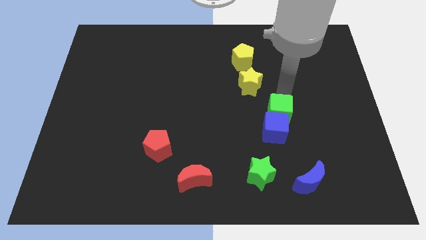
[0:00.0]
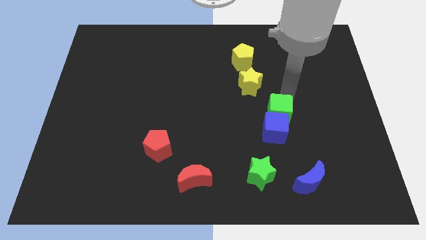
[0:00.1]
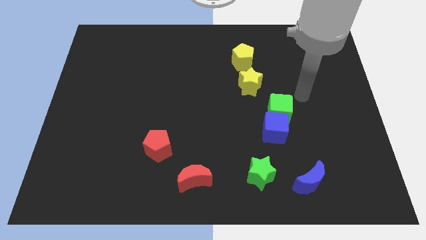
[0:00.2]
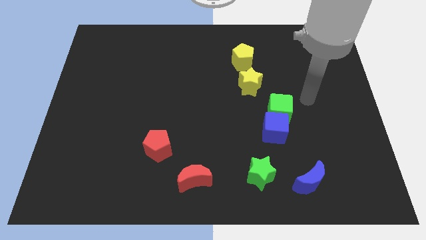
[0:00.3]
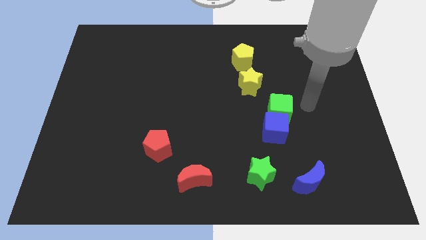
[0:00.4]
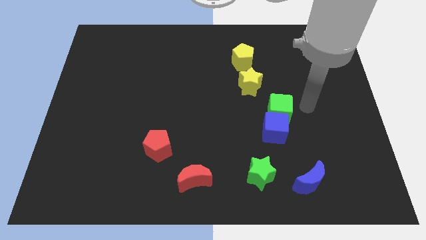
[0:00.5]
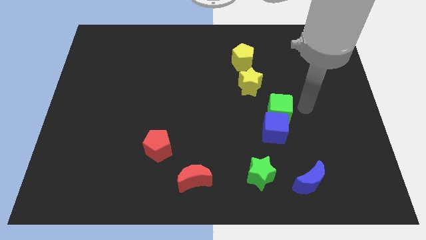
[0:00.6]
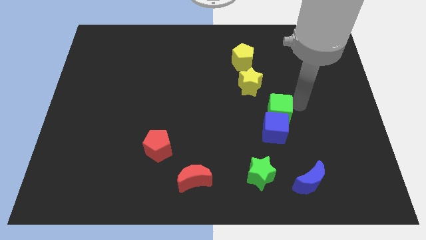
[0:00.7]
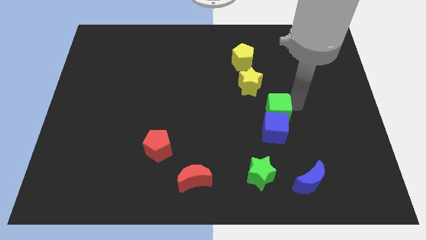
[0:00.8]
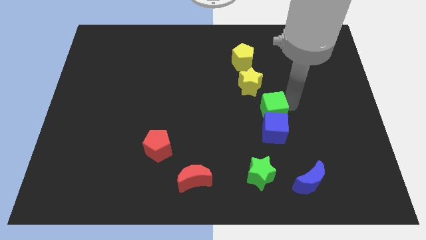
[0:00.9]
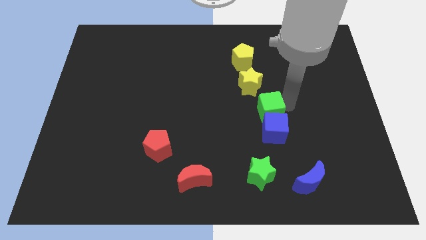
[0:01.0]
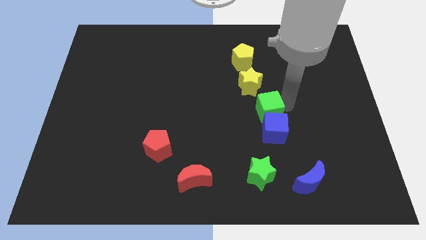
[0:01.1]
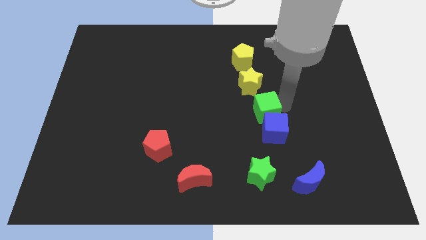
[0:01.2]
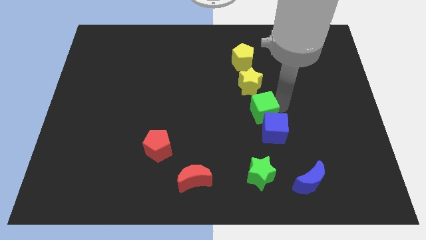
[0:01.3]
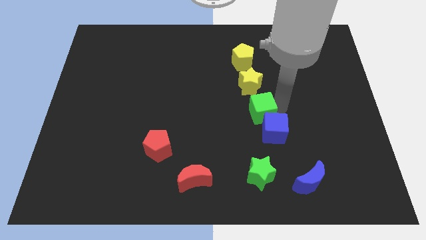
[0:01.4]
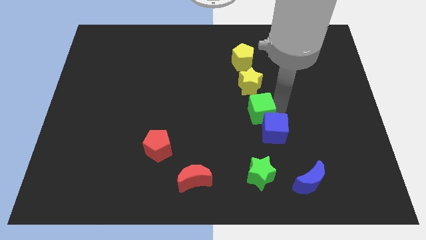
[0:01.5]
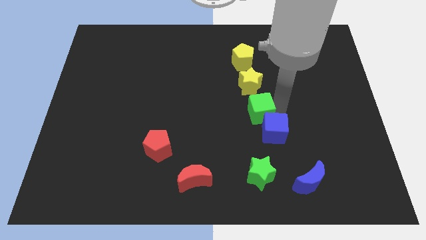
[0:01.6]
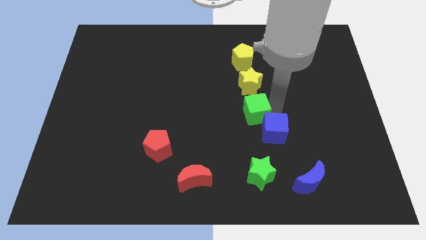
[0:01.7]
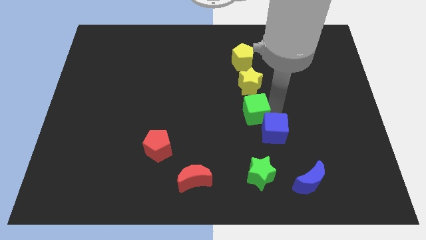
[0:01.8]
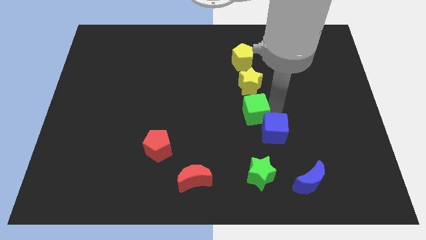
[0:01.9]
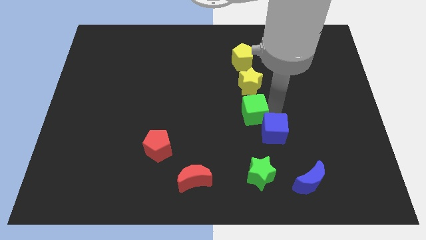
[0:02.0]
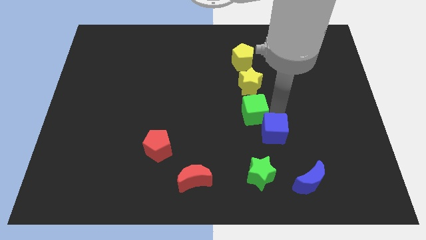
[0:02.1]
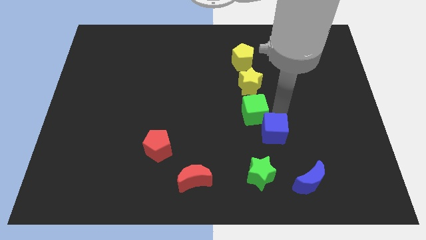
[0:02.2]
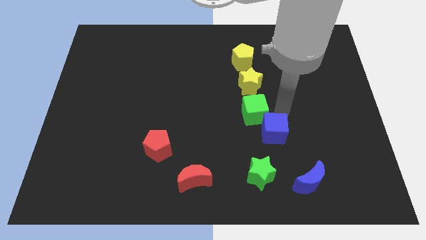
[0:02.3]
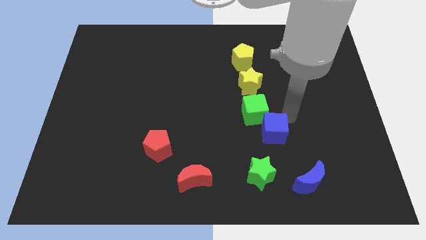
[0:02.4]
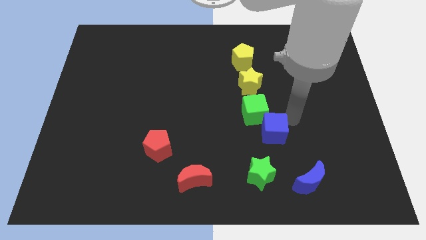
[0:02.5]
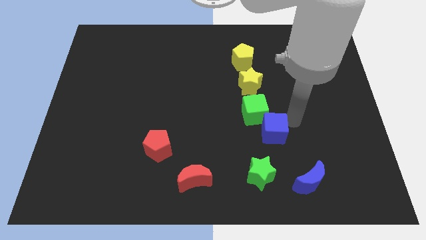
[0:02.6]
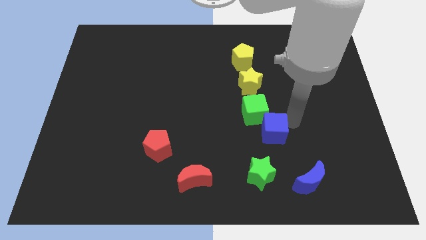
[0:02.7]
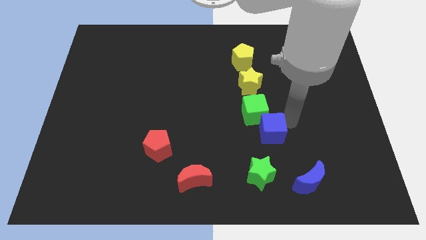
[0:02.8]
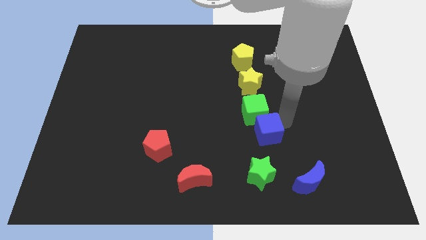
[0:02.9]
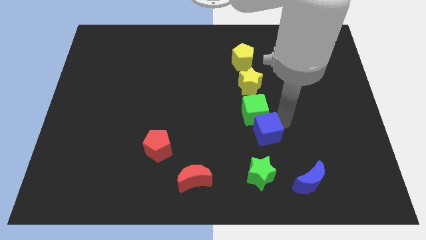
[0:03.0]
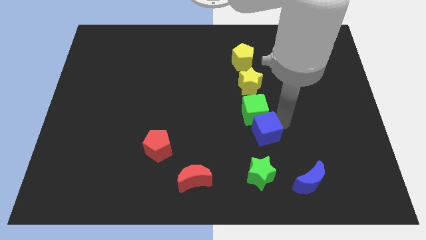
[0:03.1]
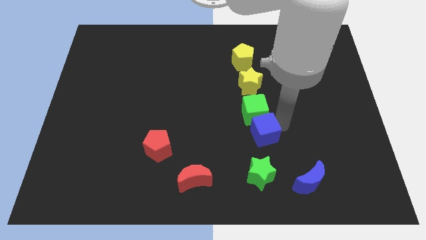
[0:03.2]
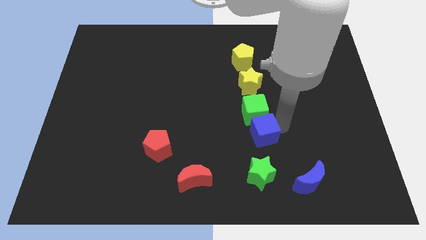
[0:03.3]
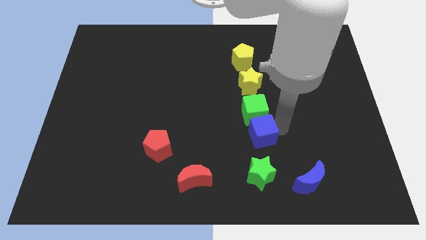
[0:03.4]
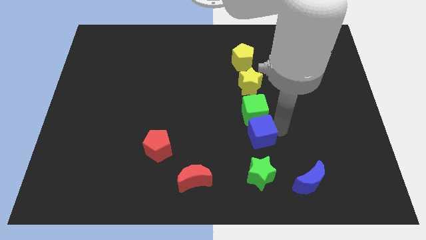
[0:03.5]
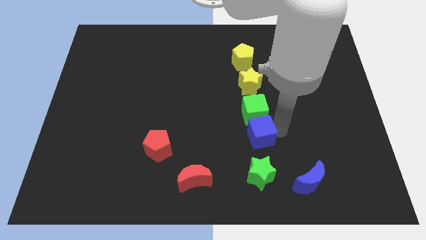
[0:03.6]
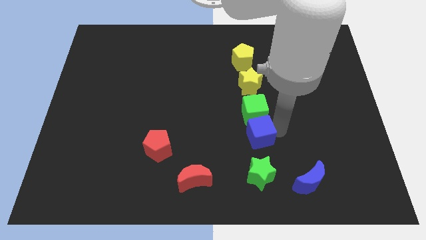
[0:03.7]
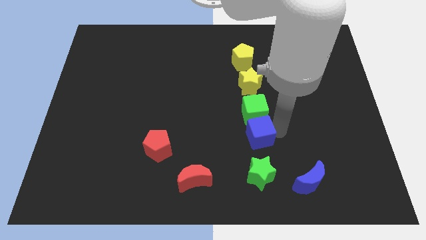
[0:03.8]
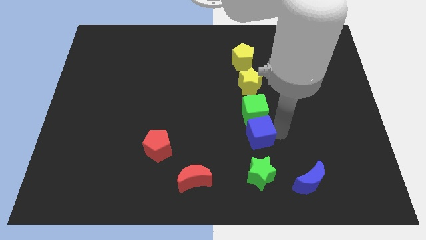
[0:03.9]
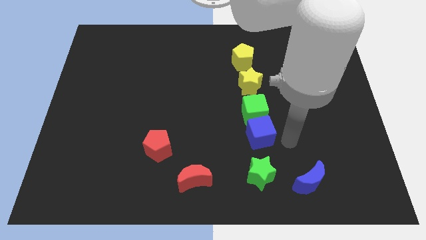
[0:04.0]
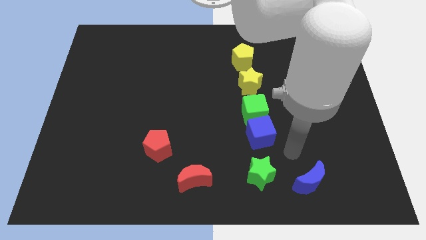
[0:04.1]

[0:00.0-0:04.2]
move the green and blue cubes slightly to the left side of the board

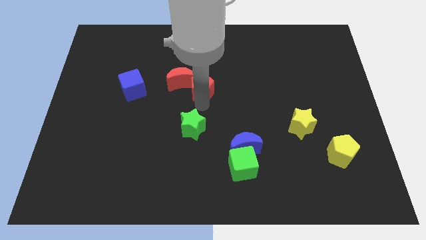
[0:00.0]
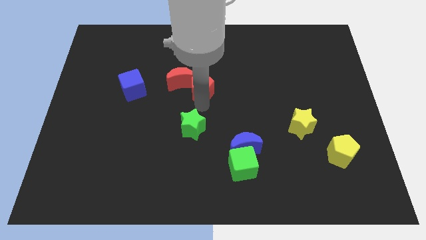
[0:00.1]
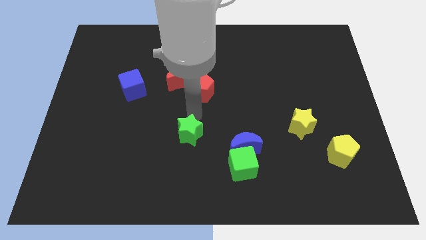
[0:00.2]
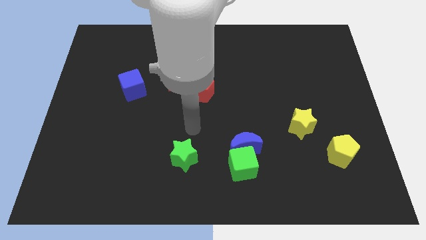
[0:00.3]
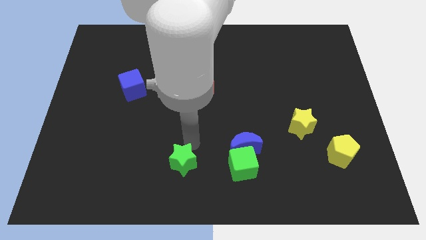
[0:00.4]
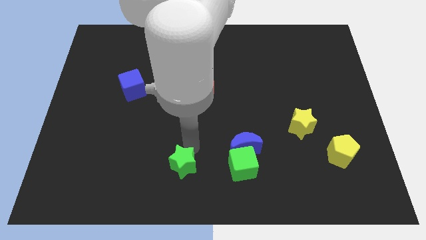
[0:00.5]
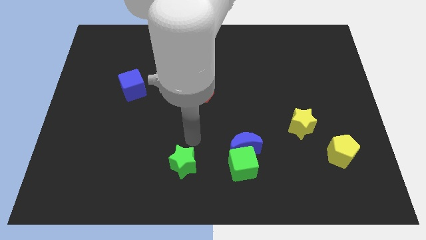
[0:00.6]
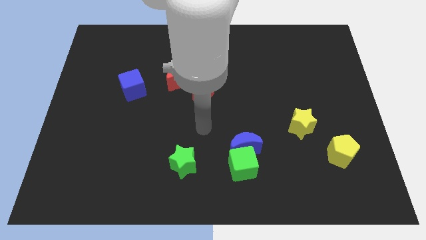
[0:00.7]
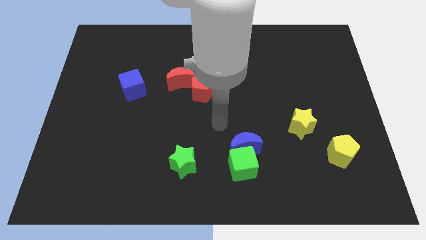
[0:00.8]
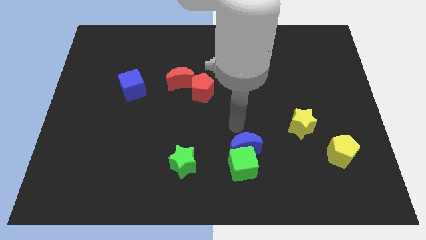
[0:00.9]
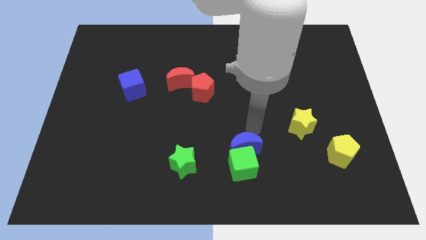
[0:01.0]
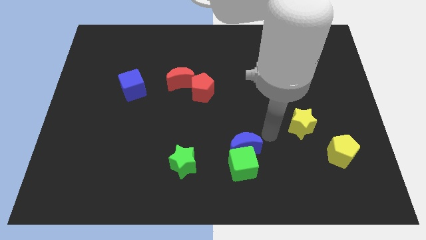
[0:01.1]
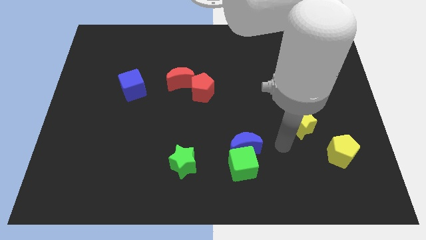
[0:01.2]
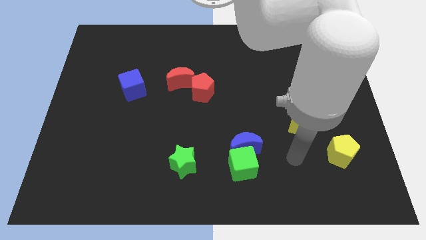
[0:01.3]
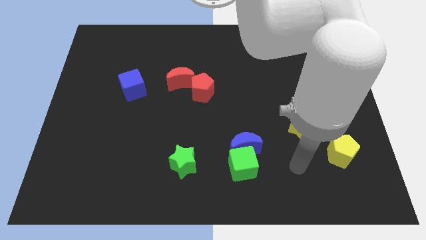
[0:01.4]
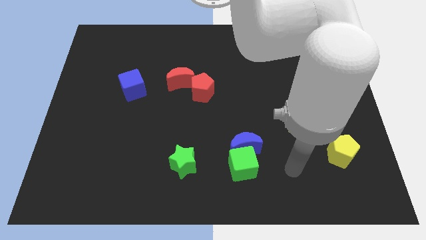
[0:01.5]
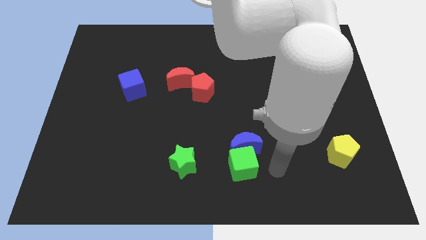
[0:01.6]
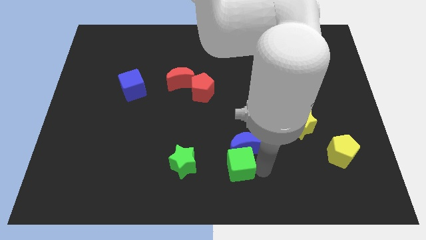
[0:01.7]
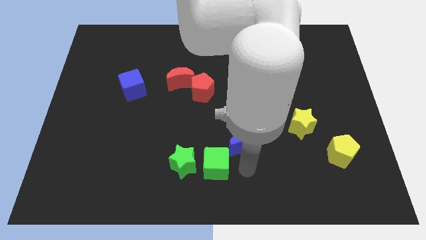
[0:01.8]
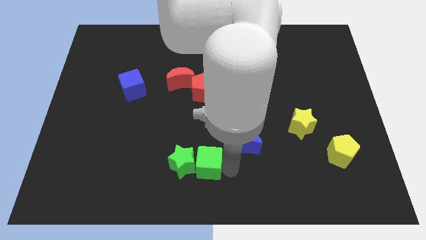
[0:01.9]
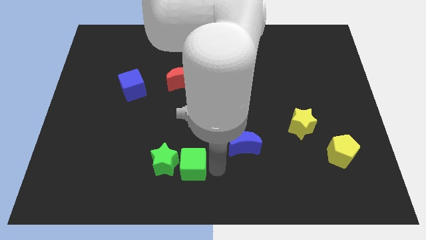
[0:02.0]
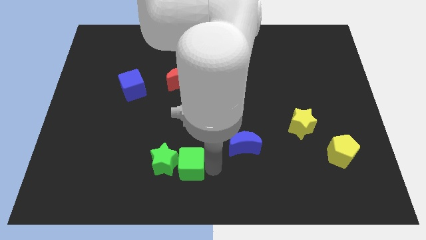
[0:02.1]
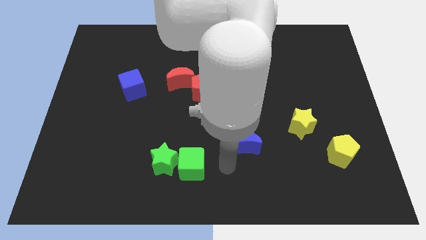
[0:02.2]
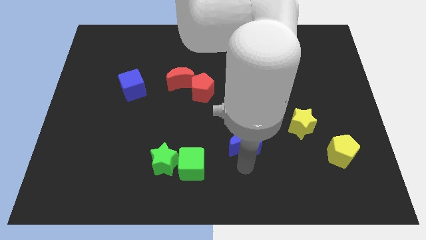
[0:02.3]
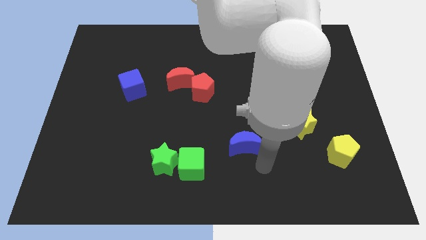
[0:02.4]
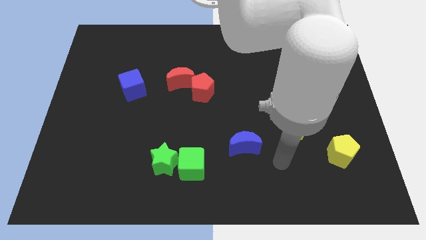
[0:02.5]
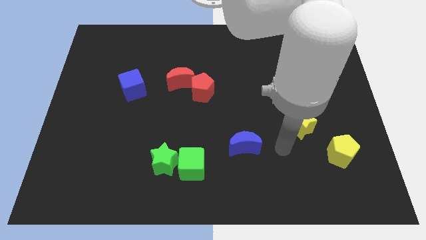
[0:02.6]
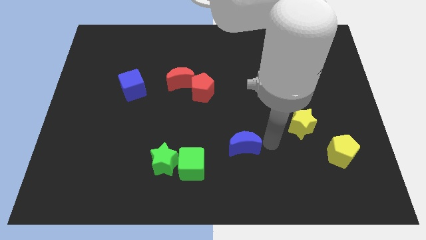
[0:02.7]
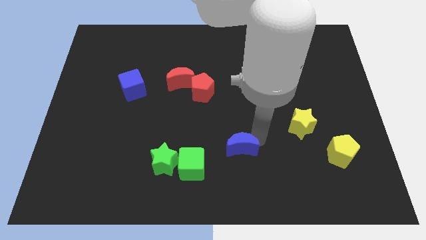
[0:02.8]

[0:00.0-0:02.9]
move arm near blue moon

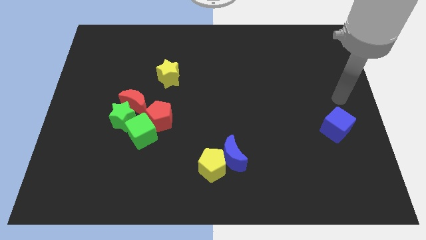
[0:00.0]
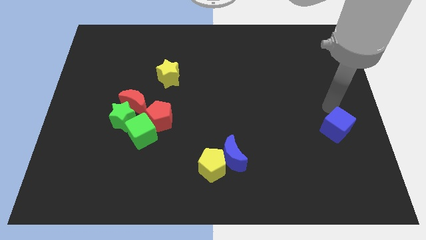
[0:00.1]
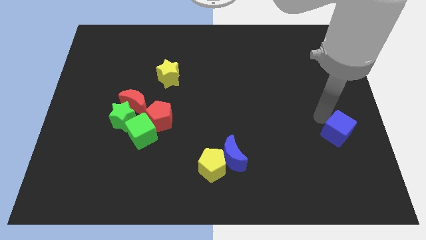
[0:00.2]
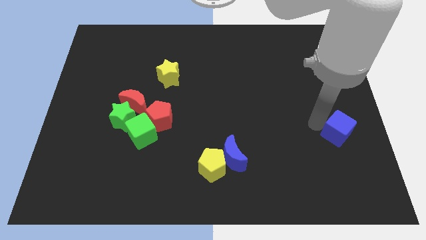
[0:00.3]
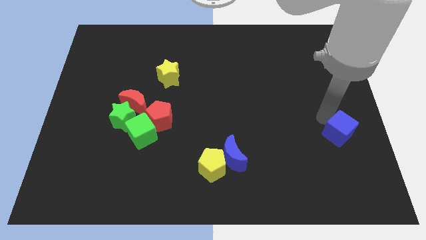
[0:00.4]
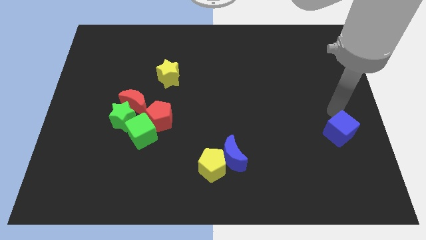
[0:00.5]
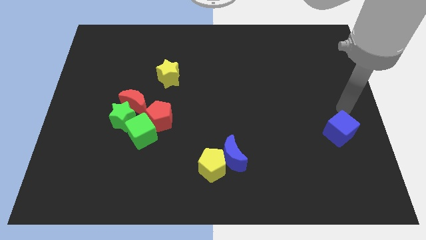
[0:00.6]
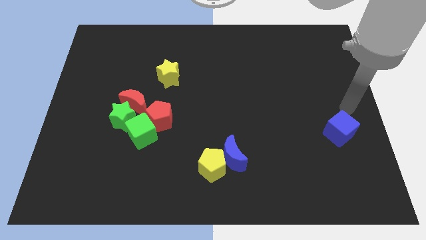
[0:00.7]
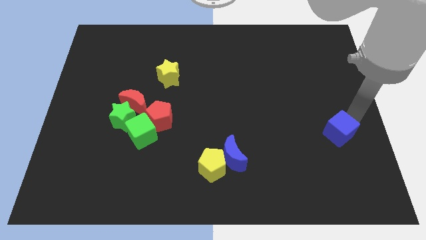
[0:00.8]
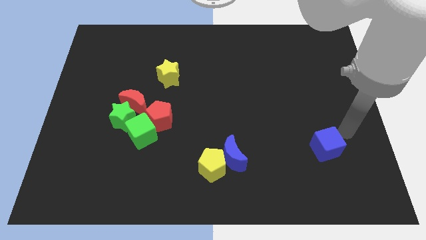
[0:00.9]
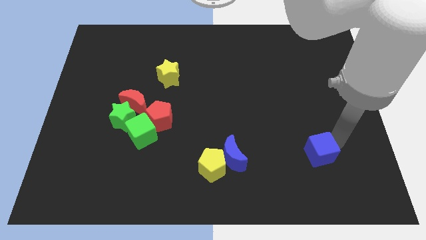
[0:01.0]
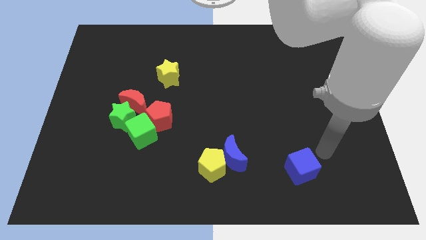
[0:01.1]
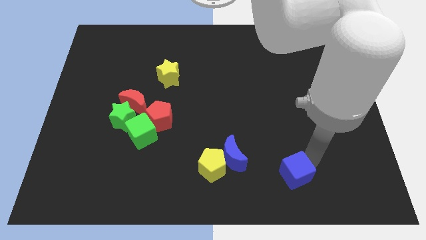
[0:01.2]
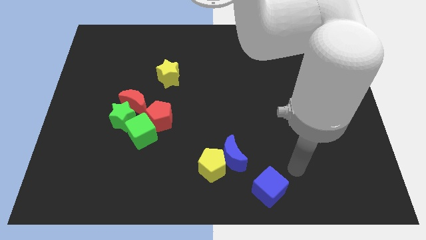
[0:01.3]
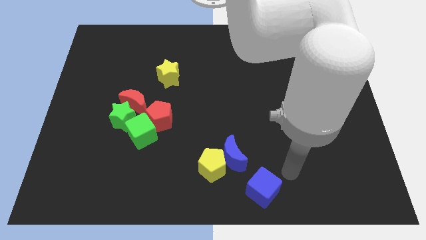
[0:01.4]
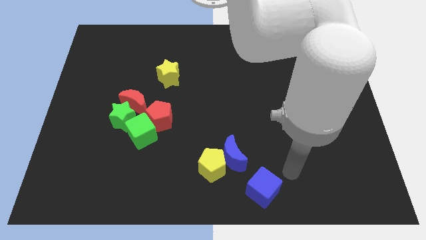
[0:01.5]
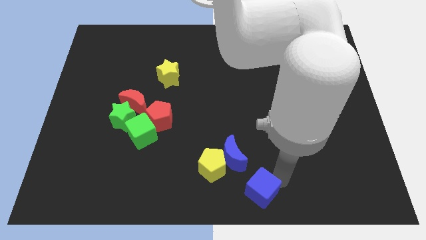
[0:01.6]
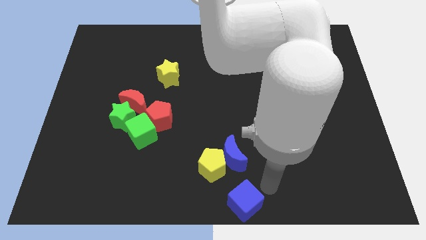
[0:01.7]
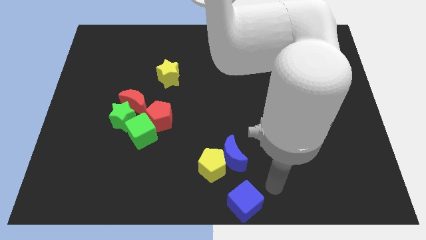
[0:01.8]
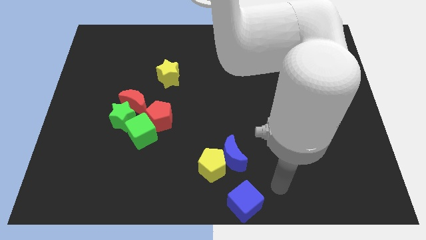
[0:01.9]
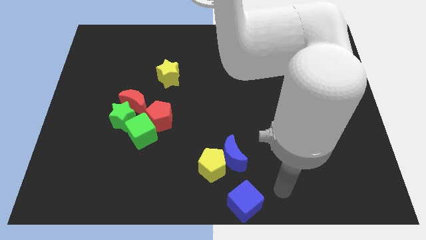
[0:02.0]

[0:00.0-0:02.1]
slide the blue cube below the blue moon
